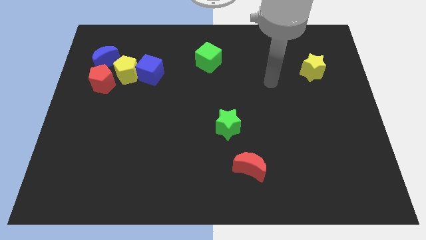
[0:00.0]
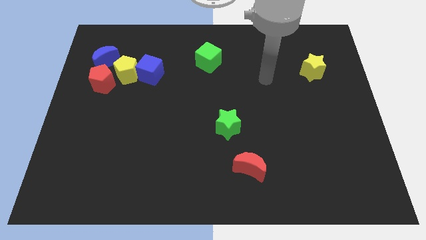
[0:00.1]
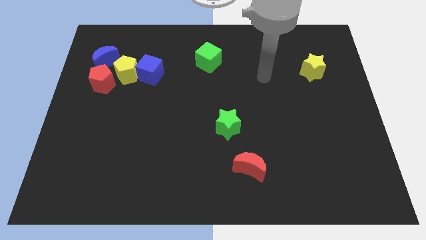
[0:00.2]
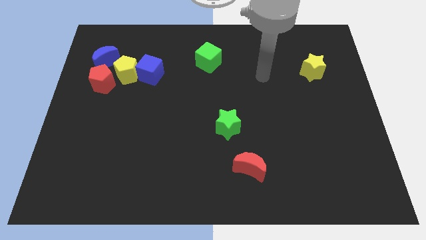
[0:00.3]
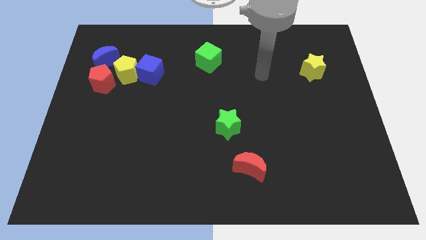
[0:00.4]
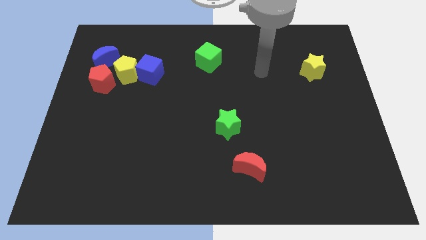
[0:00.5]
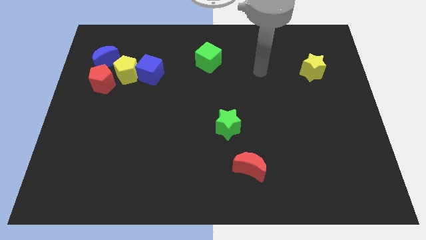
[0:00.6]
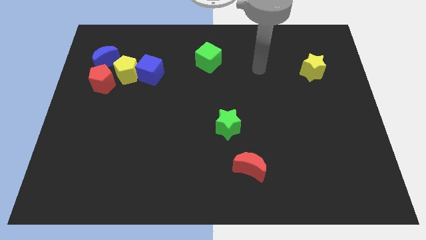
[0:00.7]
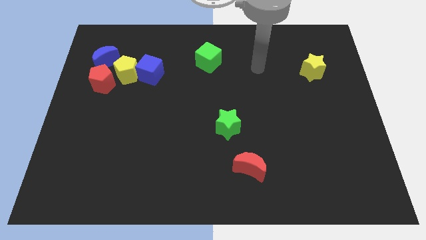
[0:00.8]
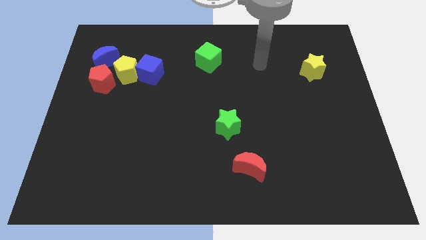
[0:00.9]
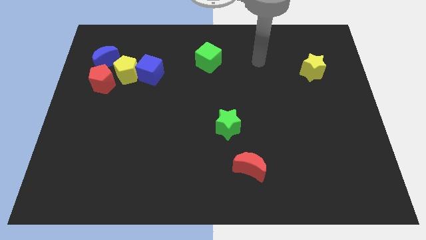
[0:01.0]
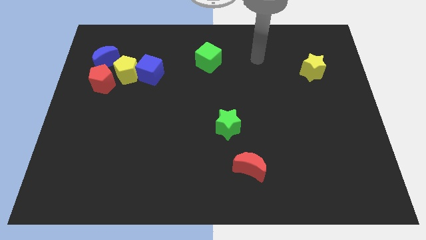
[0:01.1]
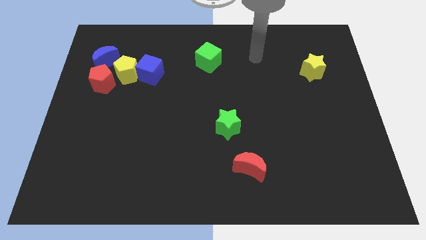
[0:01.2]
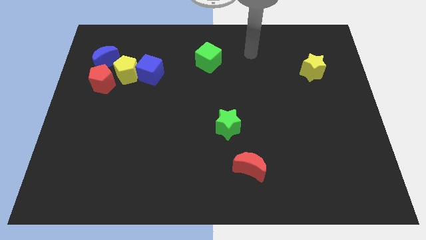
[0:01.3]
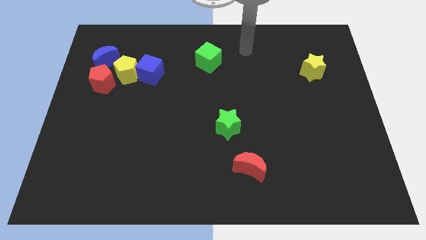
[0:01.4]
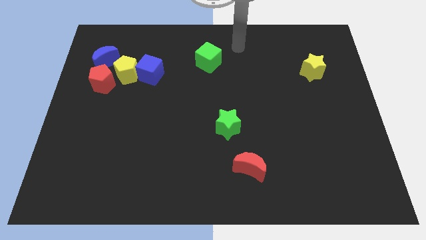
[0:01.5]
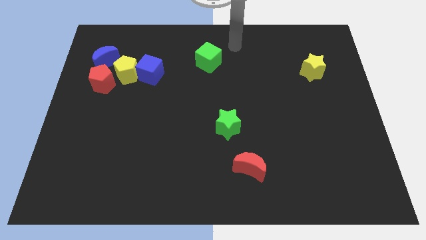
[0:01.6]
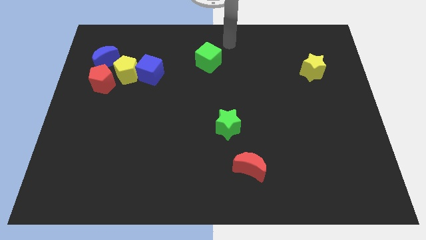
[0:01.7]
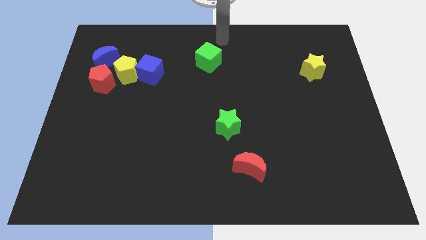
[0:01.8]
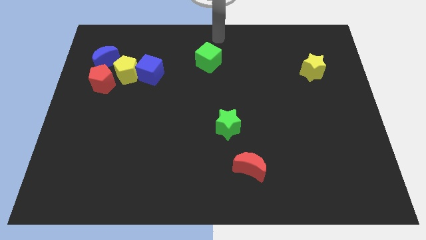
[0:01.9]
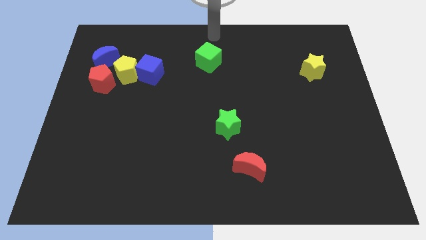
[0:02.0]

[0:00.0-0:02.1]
move your arm on top of the green cube

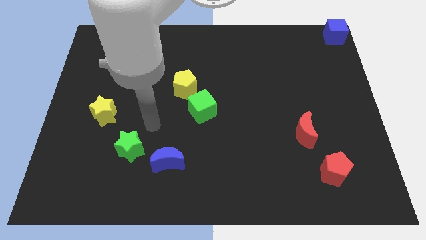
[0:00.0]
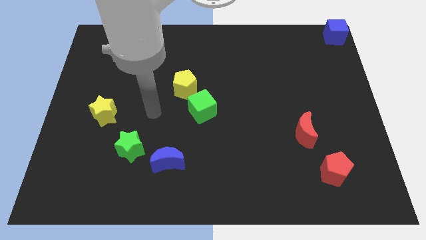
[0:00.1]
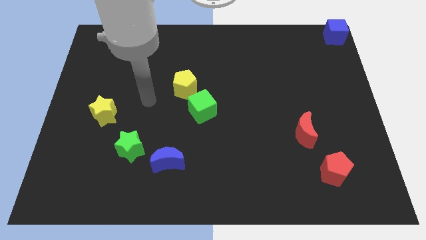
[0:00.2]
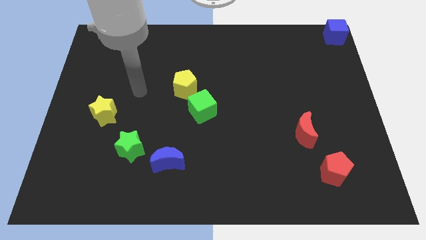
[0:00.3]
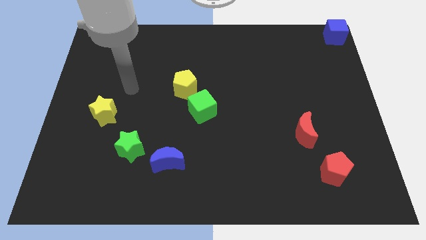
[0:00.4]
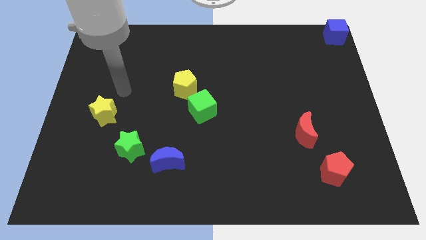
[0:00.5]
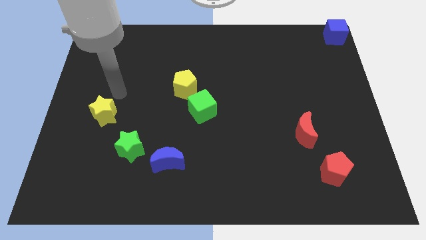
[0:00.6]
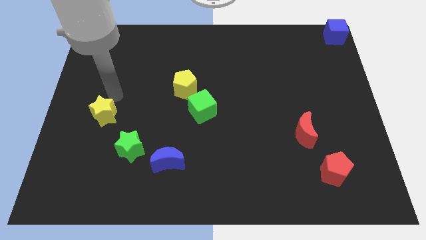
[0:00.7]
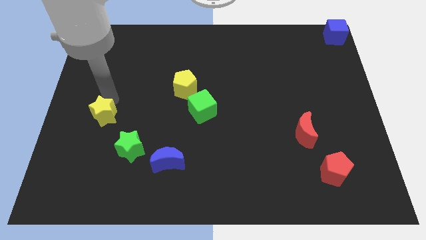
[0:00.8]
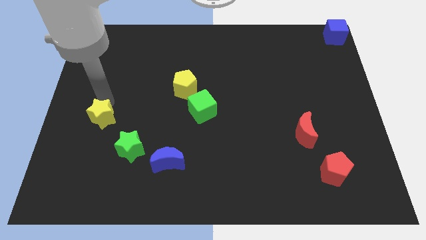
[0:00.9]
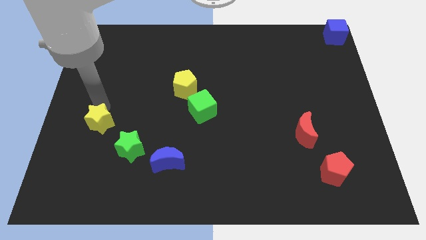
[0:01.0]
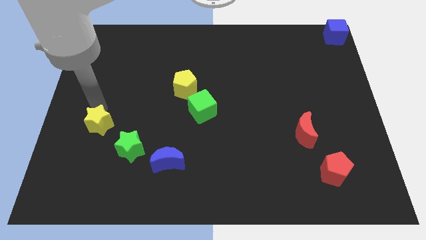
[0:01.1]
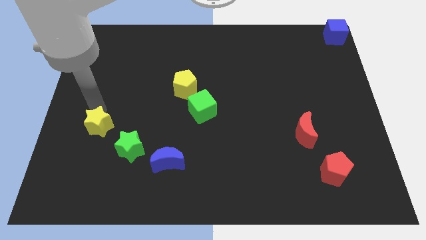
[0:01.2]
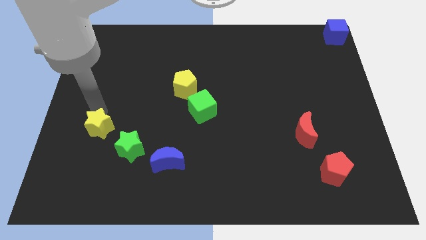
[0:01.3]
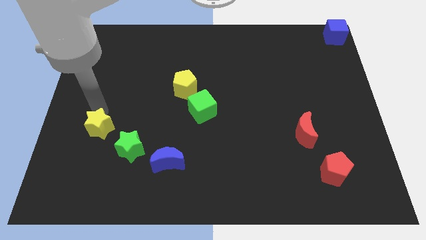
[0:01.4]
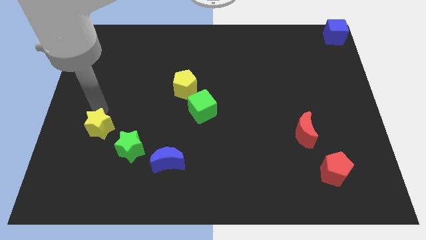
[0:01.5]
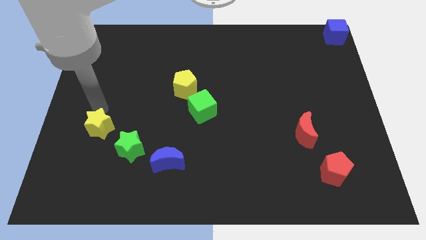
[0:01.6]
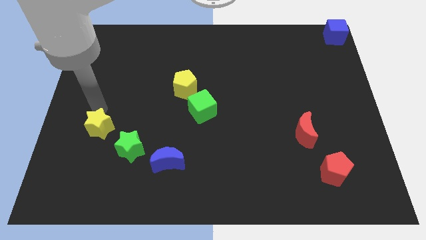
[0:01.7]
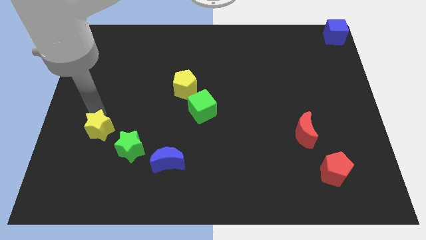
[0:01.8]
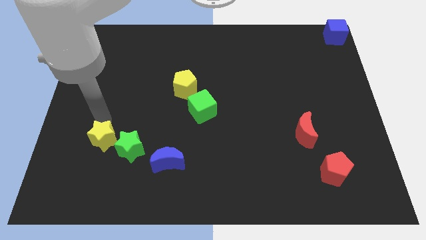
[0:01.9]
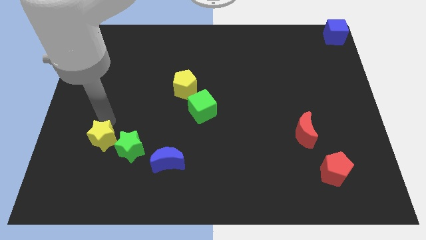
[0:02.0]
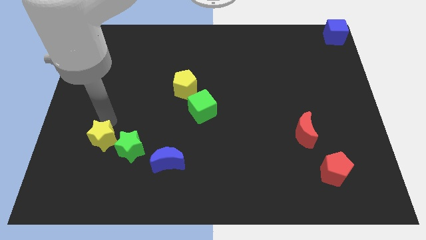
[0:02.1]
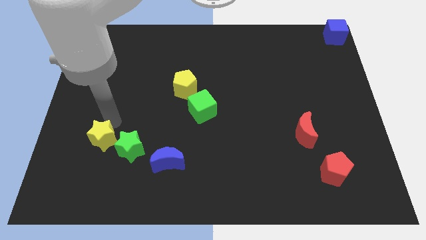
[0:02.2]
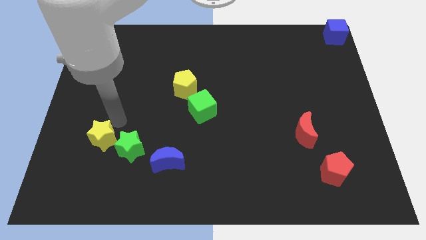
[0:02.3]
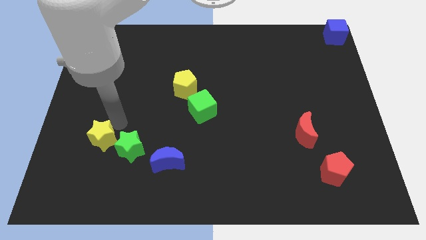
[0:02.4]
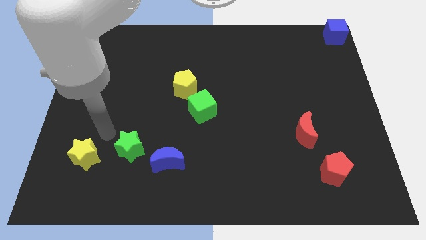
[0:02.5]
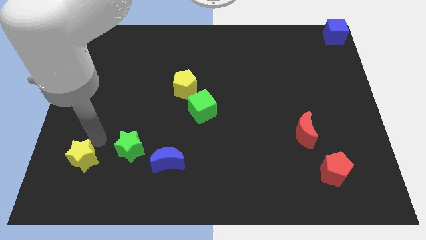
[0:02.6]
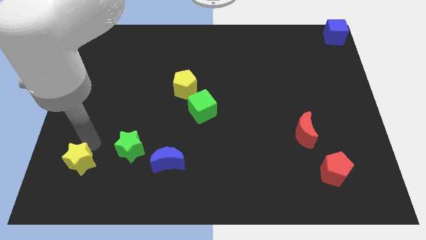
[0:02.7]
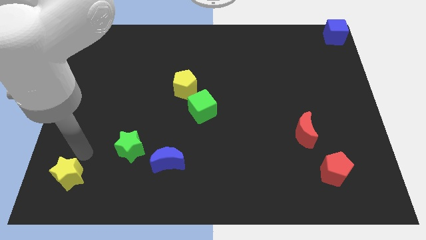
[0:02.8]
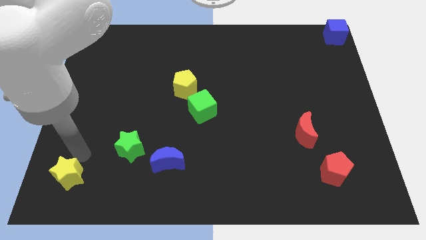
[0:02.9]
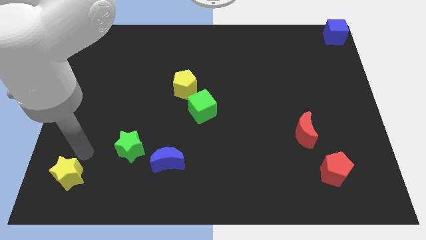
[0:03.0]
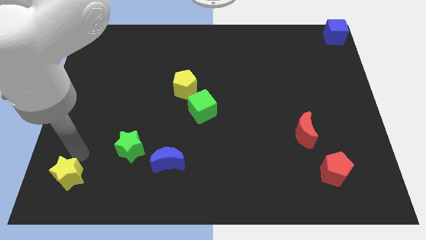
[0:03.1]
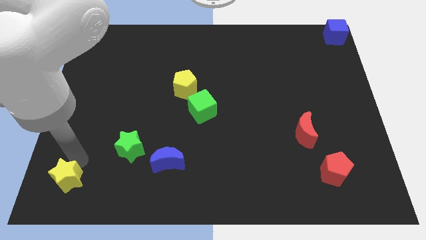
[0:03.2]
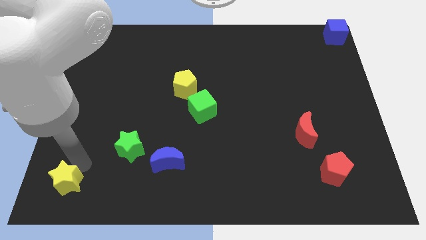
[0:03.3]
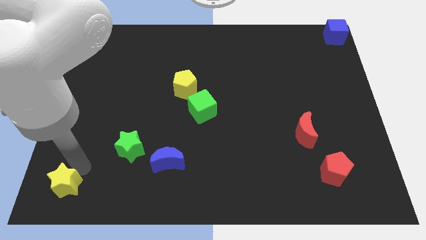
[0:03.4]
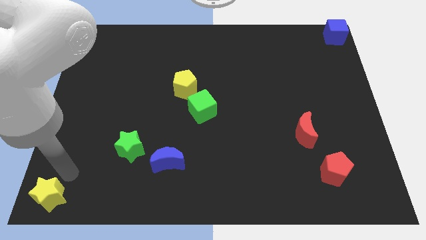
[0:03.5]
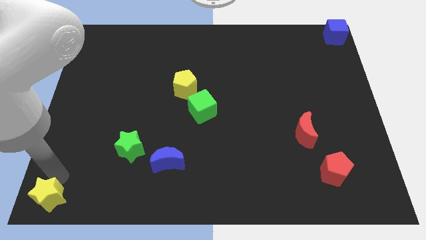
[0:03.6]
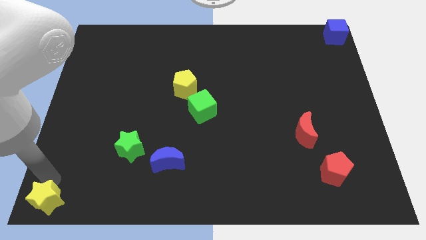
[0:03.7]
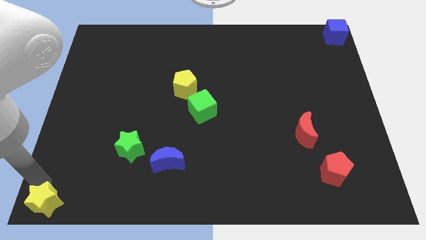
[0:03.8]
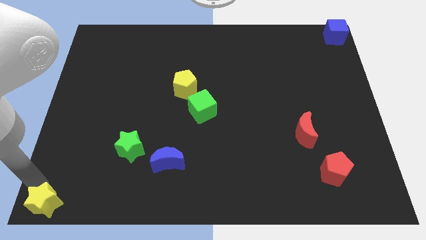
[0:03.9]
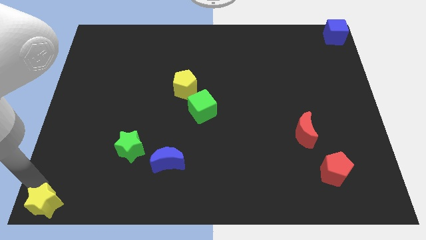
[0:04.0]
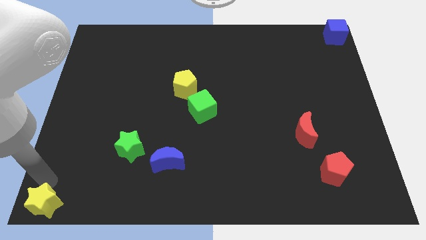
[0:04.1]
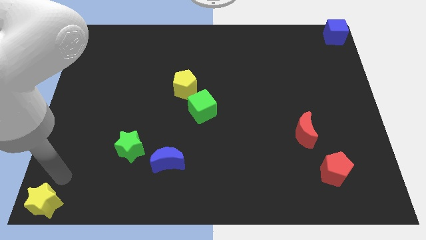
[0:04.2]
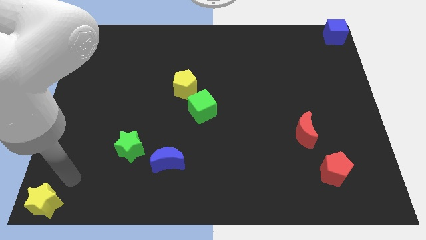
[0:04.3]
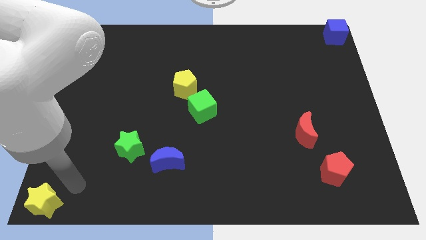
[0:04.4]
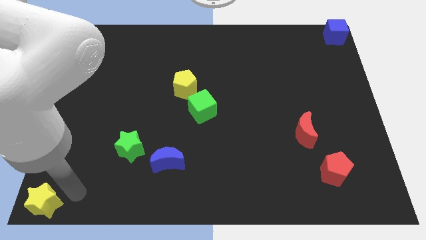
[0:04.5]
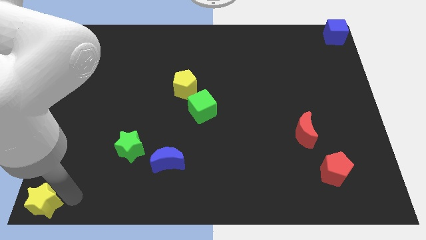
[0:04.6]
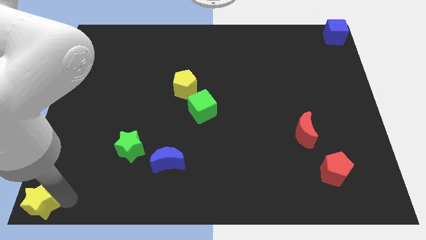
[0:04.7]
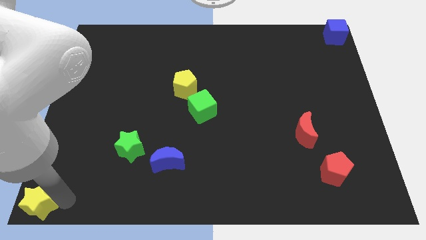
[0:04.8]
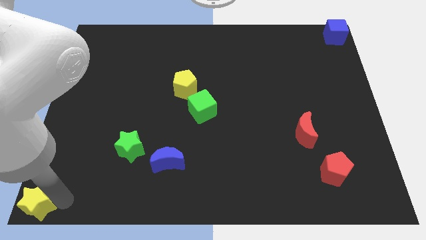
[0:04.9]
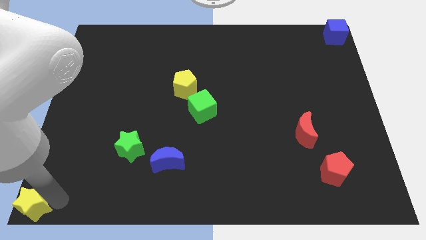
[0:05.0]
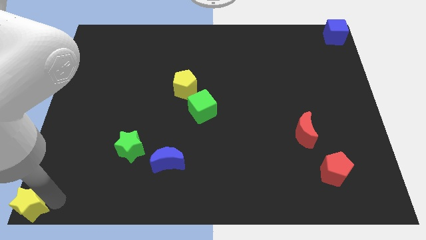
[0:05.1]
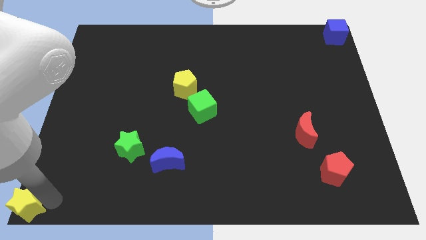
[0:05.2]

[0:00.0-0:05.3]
place the yellow star to the bottom left corner of the board

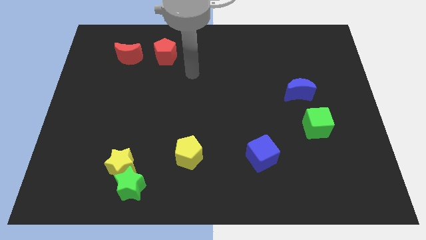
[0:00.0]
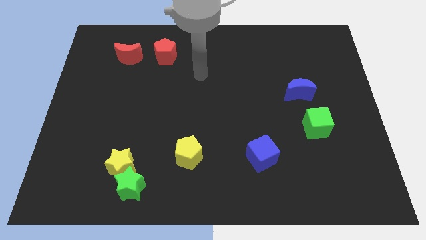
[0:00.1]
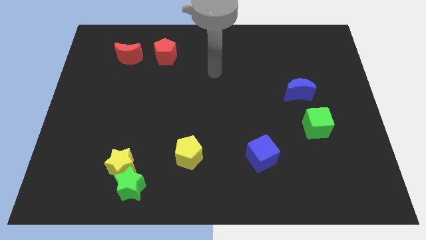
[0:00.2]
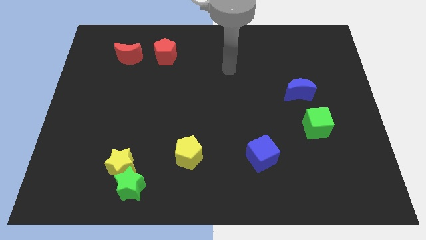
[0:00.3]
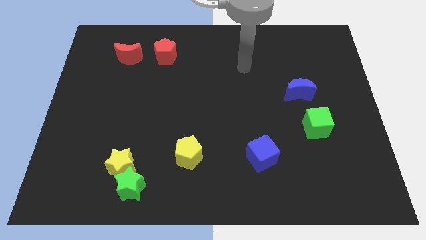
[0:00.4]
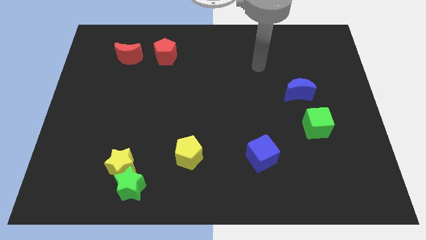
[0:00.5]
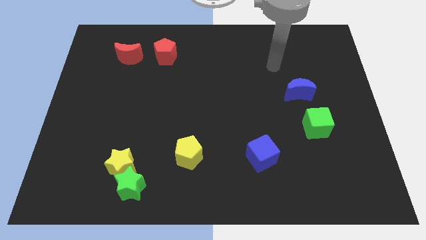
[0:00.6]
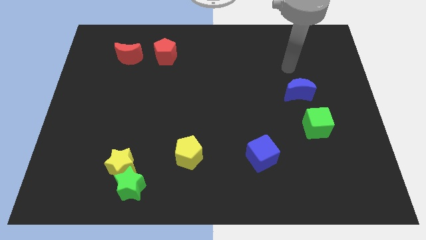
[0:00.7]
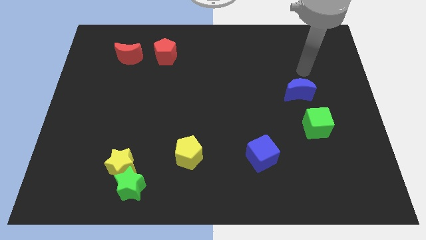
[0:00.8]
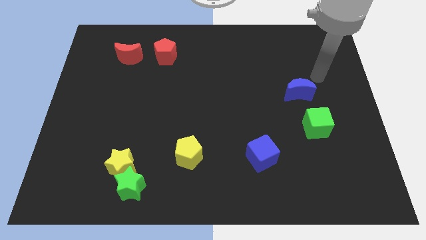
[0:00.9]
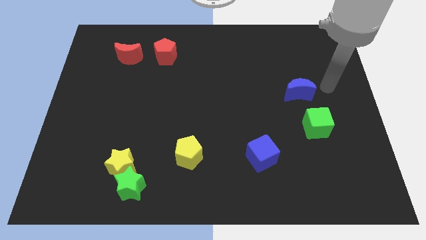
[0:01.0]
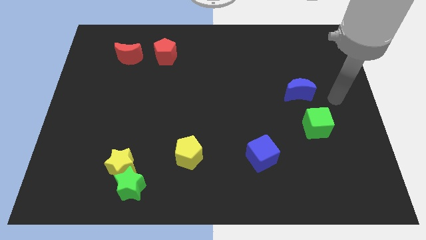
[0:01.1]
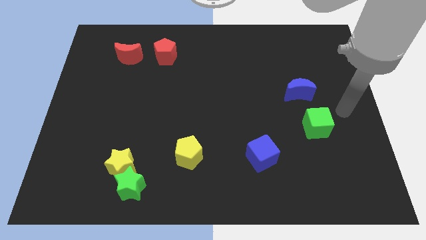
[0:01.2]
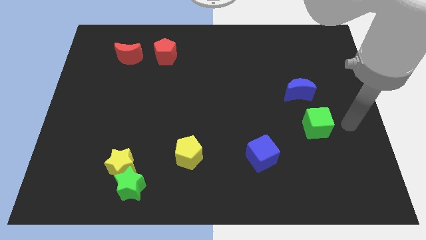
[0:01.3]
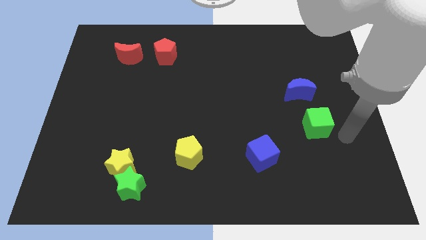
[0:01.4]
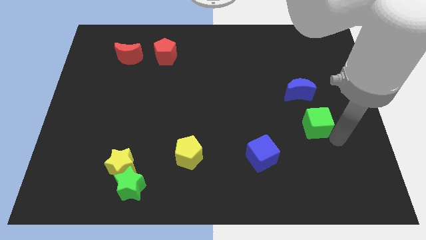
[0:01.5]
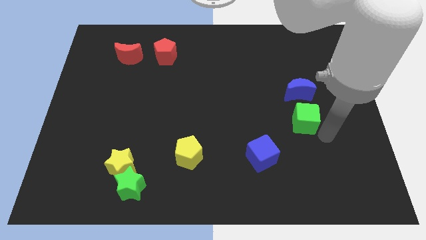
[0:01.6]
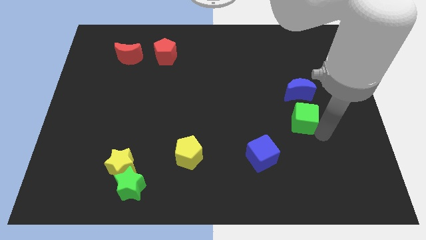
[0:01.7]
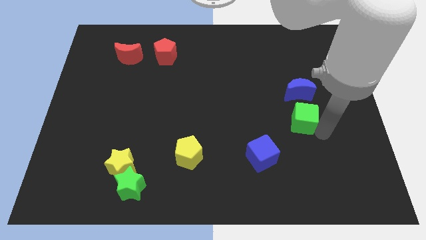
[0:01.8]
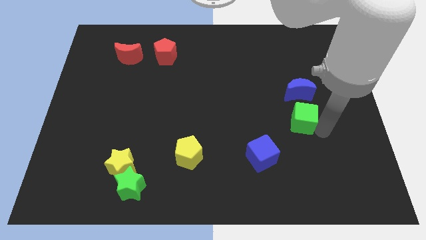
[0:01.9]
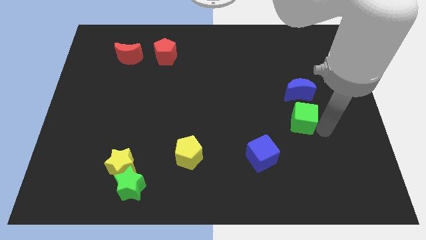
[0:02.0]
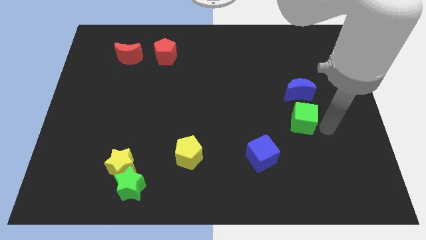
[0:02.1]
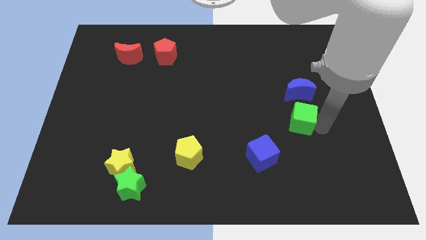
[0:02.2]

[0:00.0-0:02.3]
move the green cube slightly to the left
